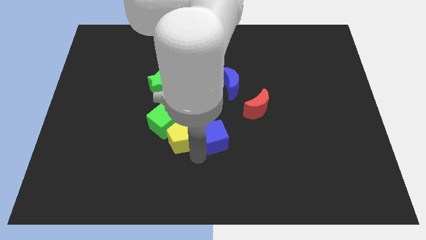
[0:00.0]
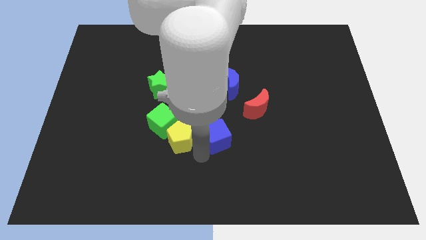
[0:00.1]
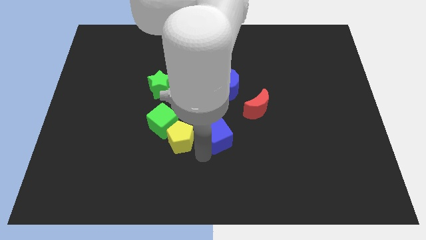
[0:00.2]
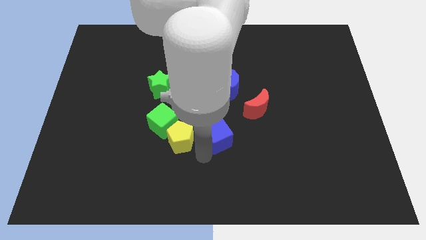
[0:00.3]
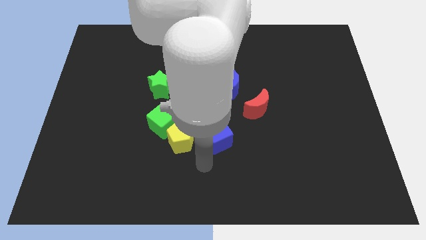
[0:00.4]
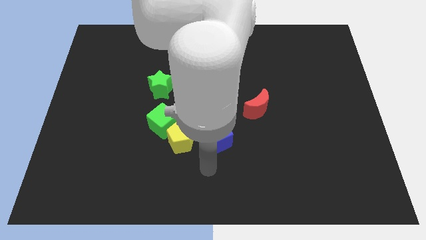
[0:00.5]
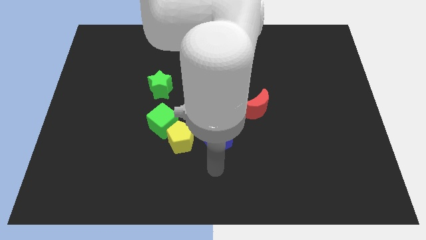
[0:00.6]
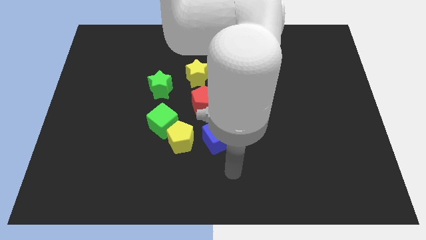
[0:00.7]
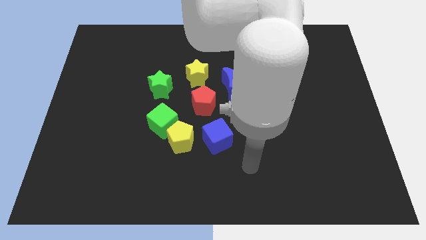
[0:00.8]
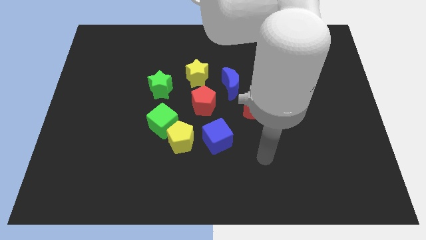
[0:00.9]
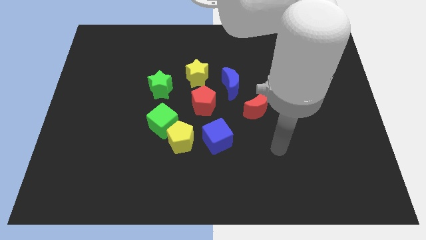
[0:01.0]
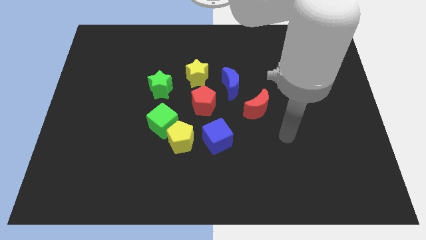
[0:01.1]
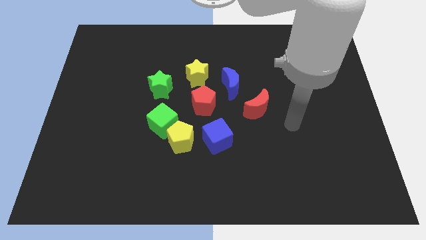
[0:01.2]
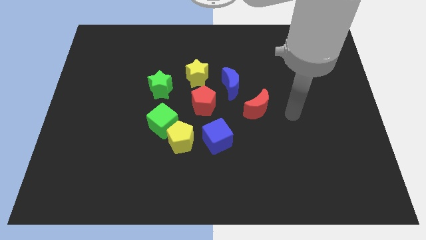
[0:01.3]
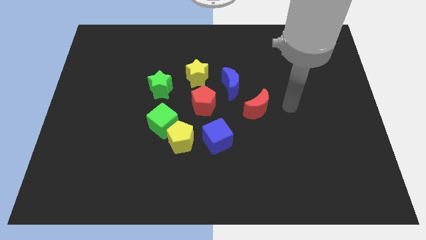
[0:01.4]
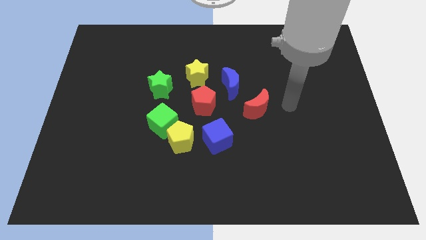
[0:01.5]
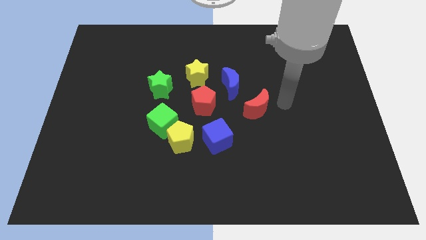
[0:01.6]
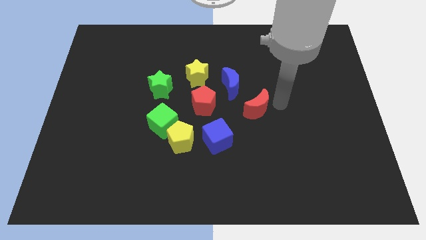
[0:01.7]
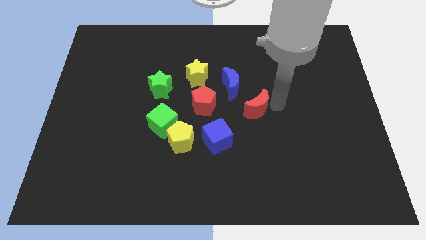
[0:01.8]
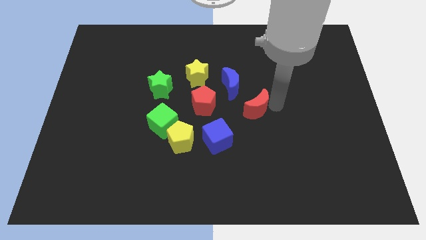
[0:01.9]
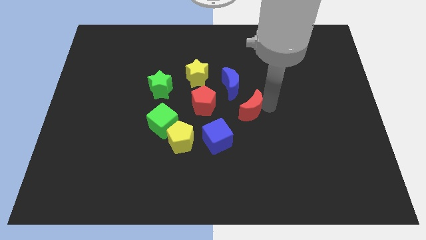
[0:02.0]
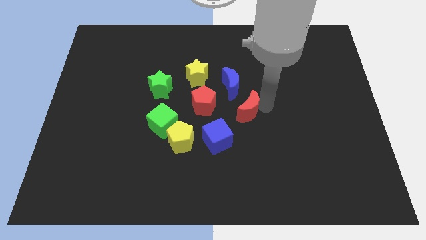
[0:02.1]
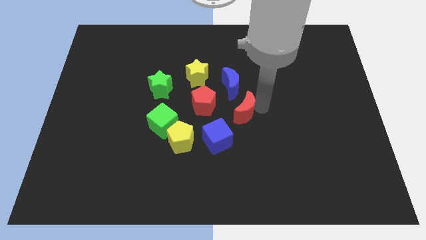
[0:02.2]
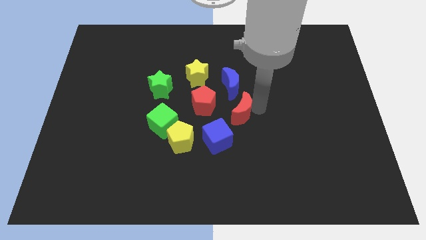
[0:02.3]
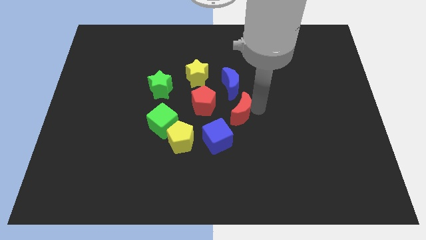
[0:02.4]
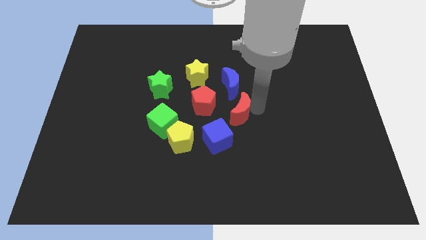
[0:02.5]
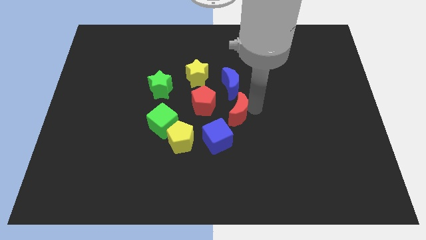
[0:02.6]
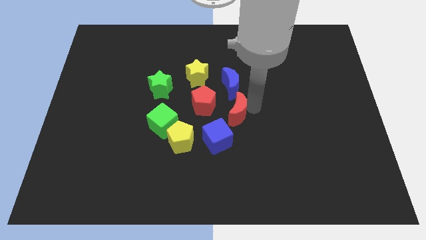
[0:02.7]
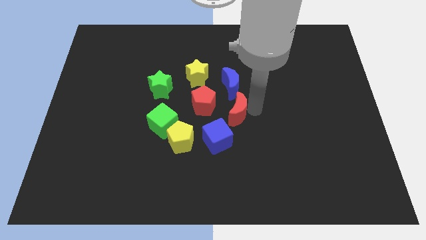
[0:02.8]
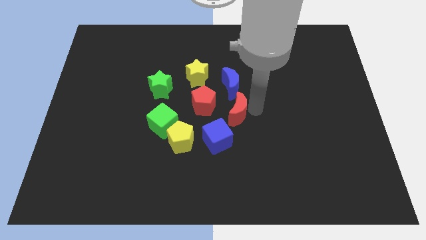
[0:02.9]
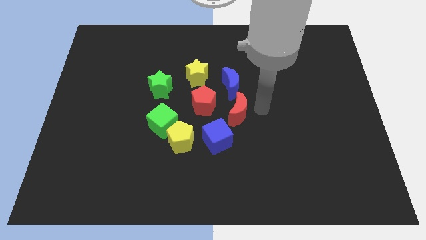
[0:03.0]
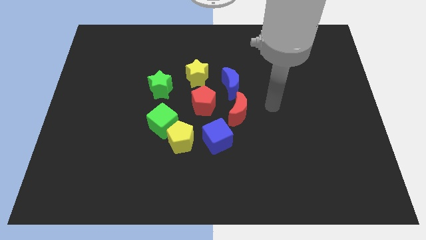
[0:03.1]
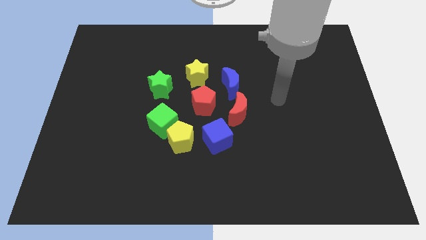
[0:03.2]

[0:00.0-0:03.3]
move the red moon to the bottom of the blue crescent

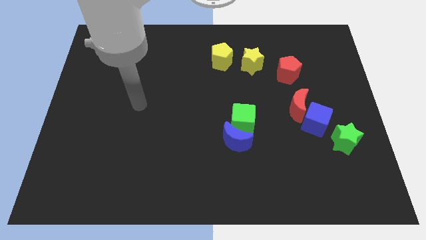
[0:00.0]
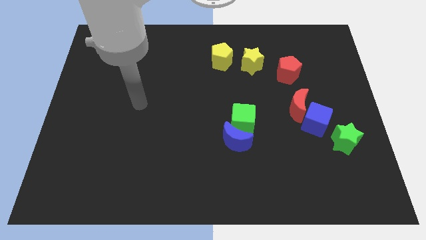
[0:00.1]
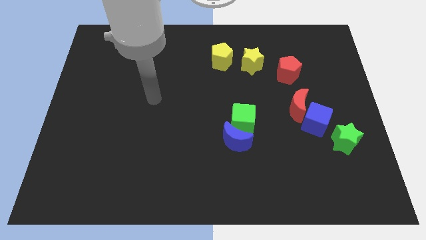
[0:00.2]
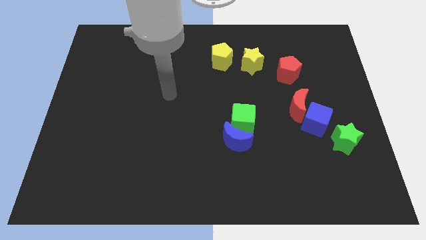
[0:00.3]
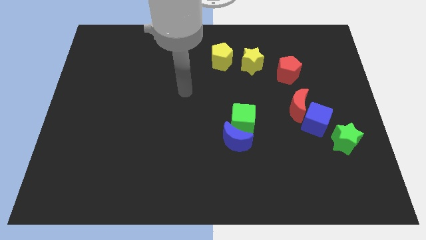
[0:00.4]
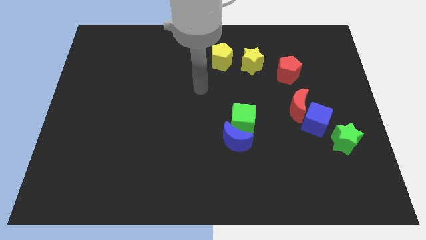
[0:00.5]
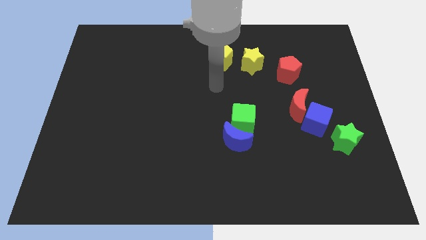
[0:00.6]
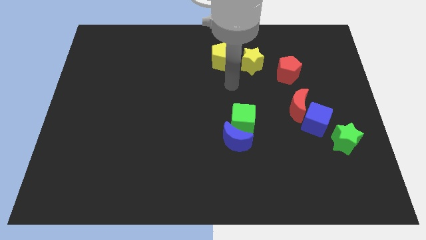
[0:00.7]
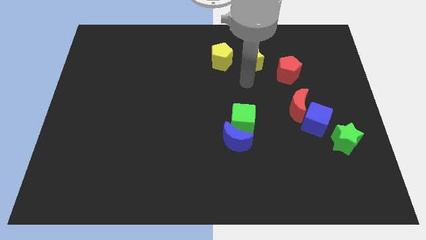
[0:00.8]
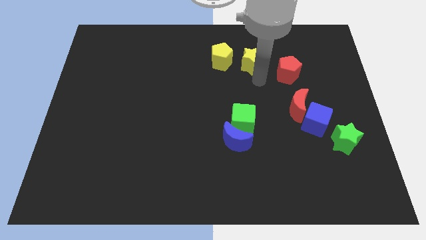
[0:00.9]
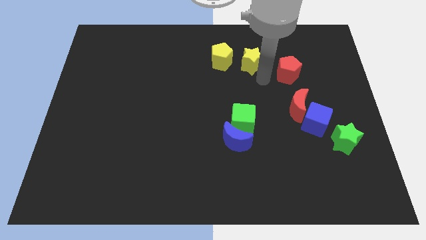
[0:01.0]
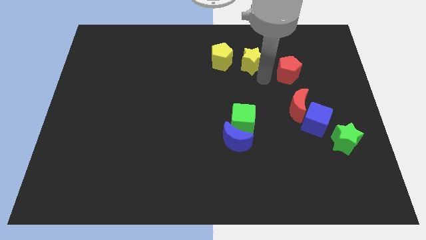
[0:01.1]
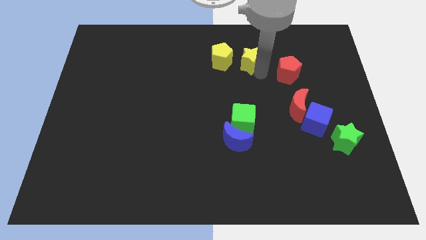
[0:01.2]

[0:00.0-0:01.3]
point your arm to the left side of red pentagon

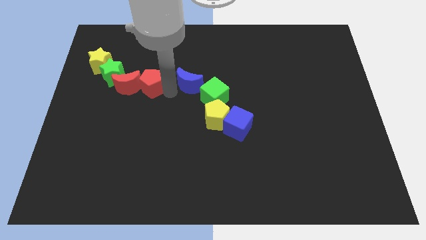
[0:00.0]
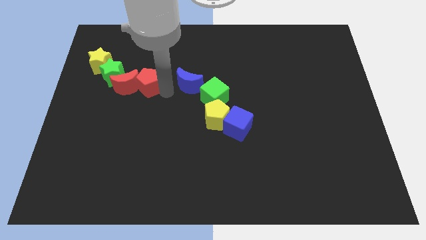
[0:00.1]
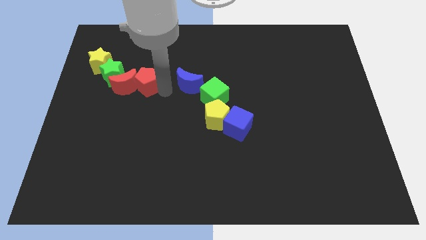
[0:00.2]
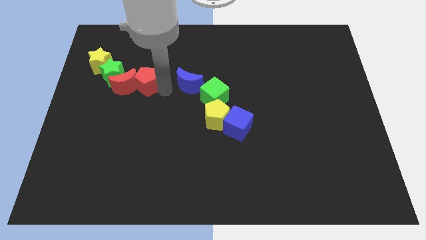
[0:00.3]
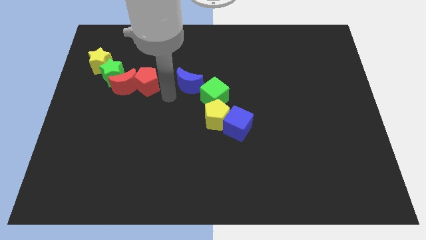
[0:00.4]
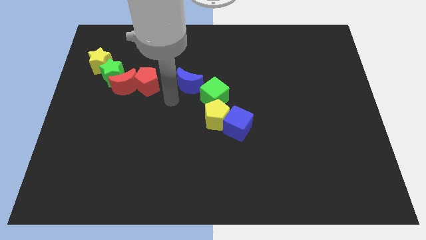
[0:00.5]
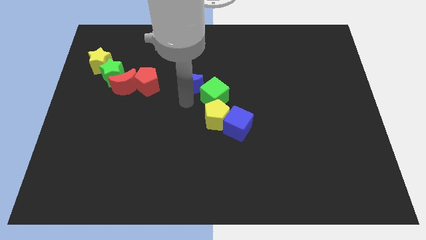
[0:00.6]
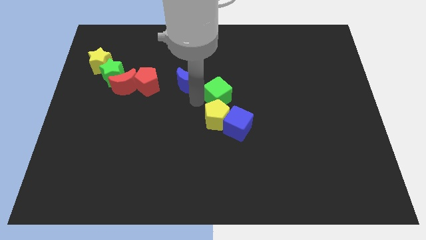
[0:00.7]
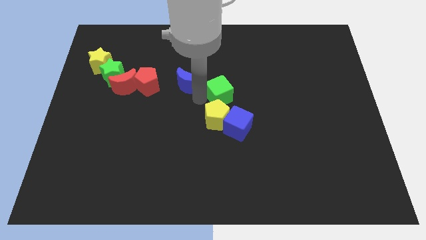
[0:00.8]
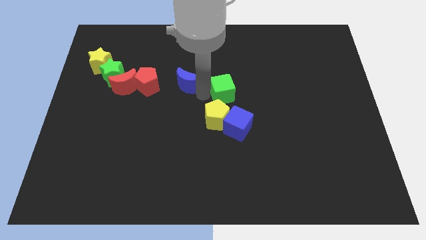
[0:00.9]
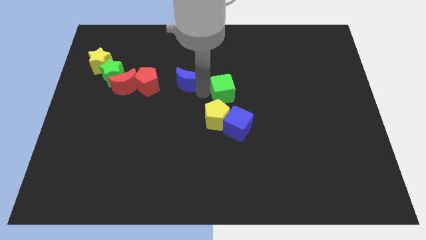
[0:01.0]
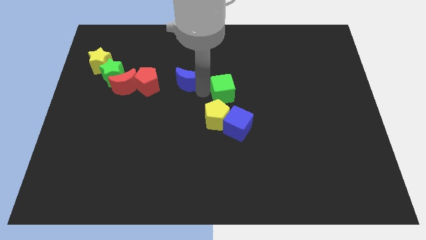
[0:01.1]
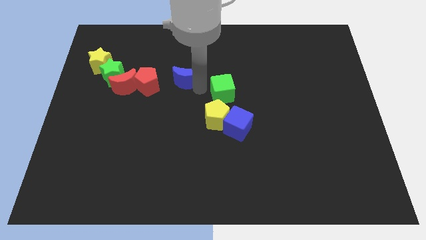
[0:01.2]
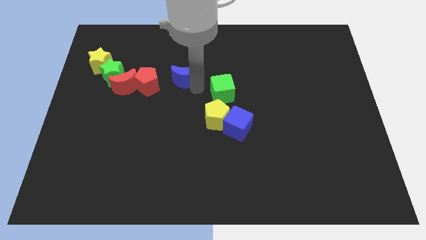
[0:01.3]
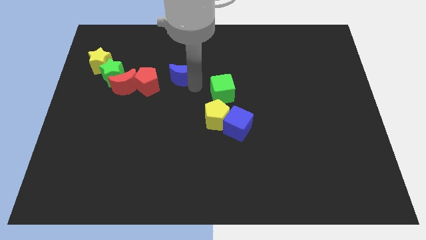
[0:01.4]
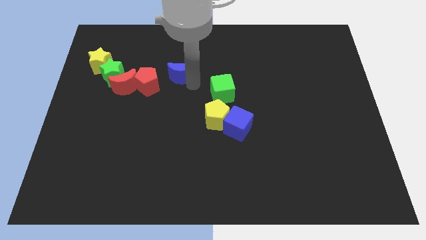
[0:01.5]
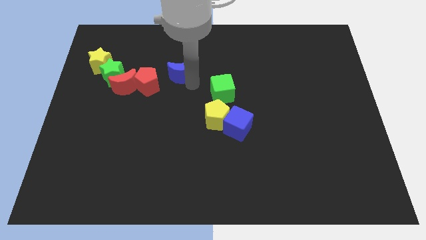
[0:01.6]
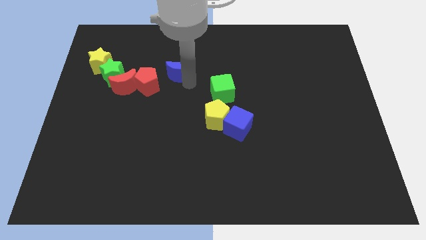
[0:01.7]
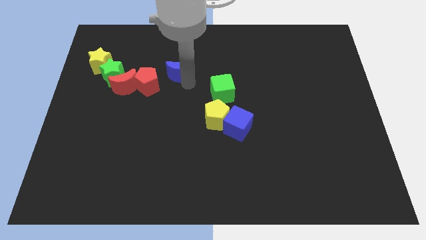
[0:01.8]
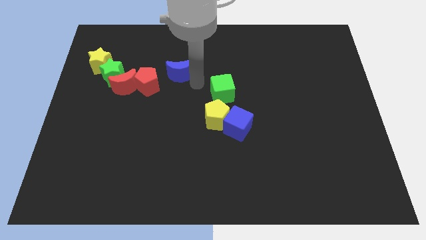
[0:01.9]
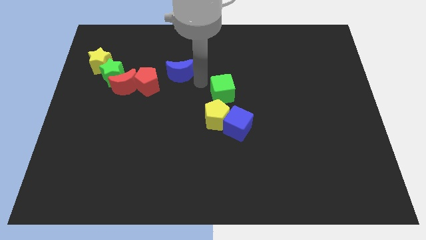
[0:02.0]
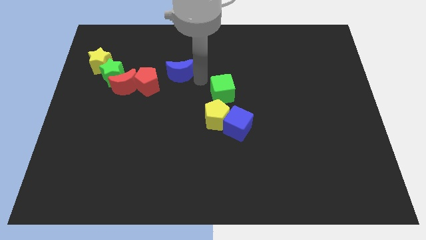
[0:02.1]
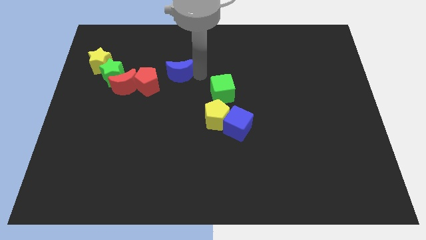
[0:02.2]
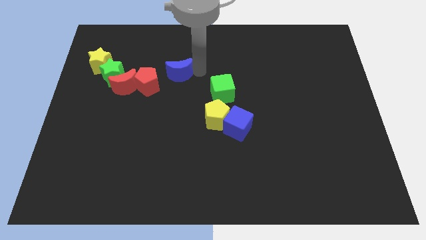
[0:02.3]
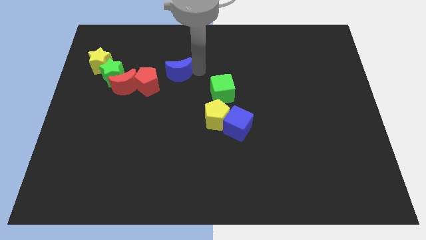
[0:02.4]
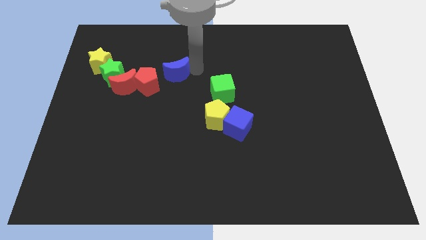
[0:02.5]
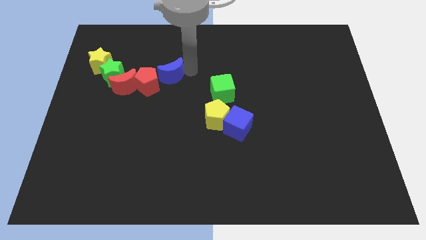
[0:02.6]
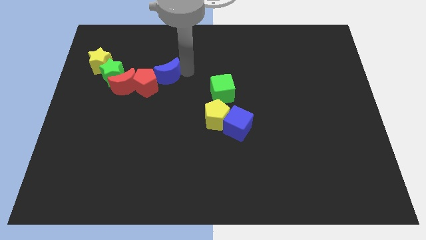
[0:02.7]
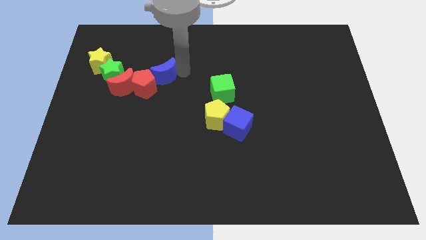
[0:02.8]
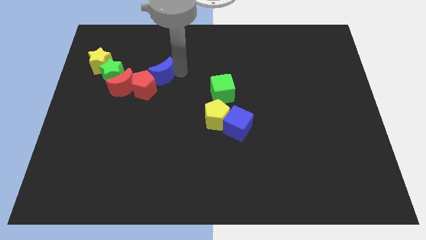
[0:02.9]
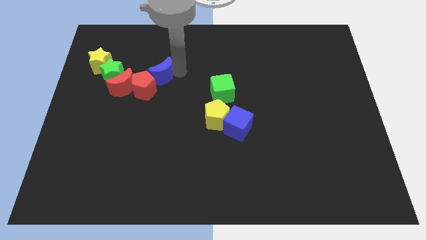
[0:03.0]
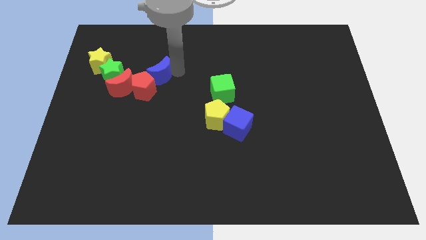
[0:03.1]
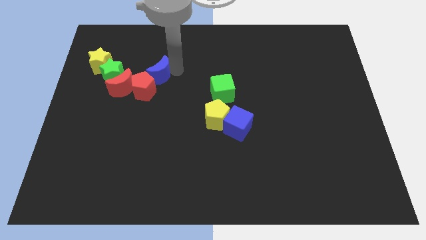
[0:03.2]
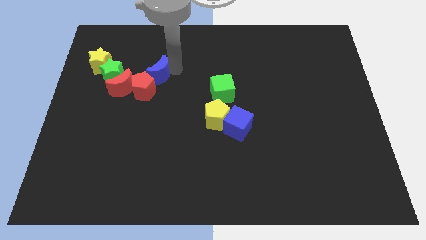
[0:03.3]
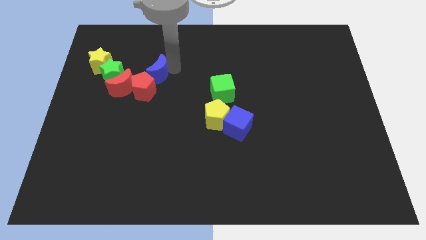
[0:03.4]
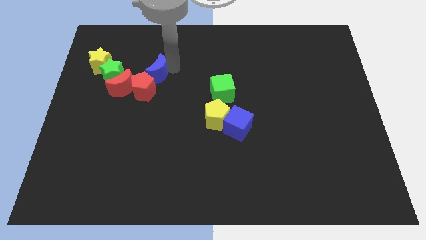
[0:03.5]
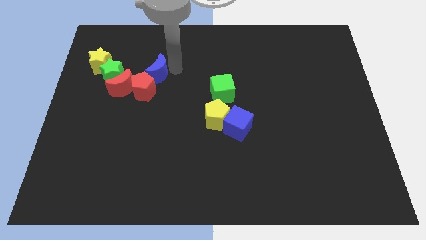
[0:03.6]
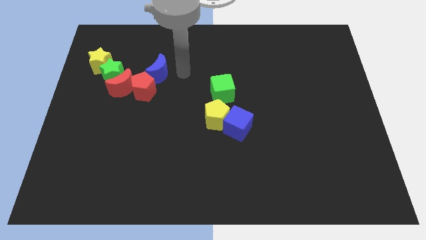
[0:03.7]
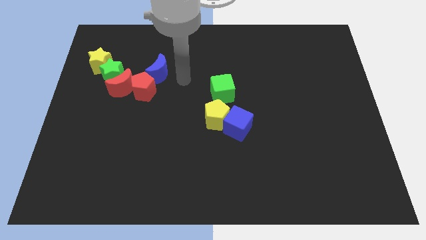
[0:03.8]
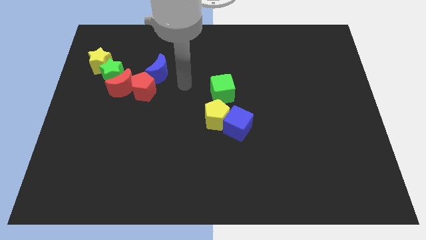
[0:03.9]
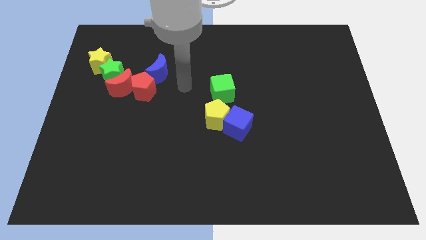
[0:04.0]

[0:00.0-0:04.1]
slide blue moon into red pentagon

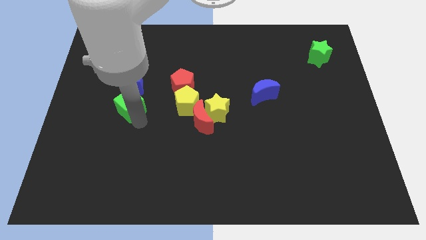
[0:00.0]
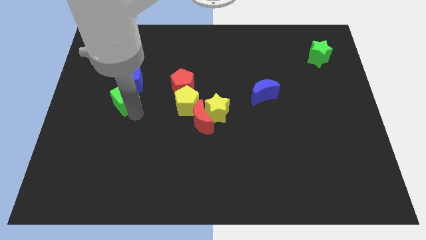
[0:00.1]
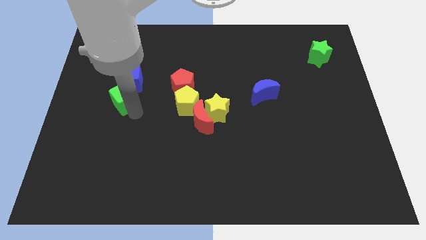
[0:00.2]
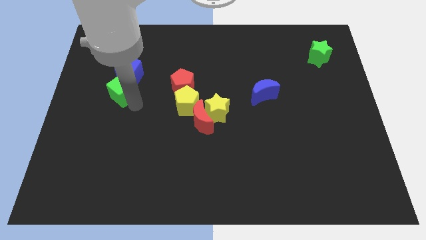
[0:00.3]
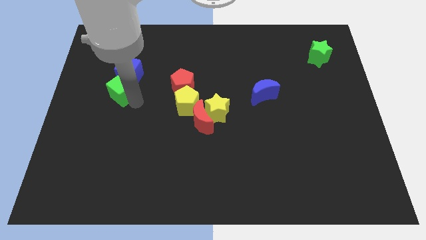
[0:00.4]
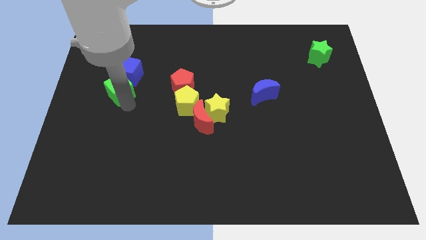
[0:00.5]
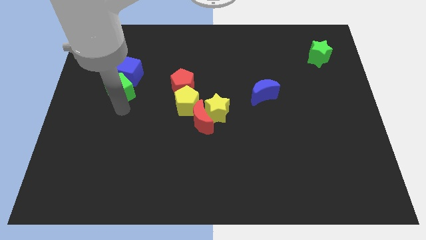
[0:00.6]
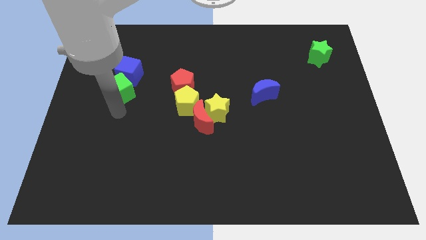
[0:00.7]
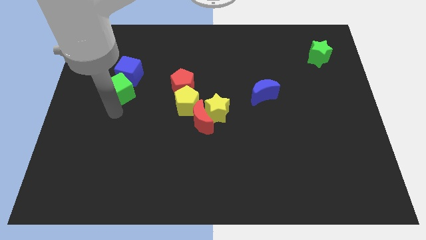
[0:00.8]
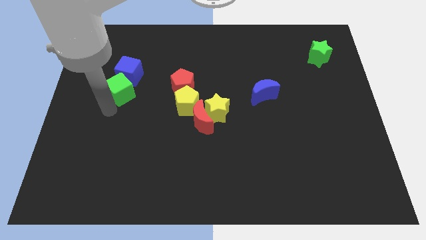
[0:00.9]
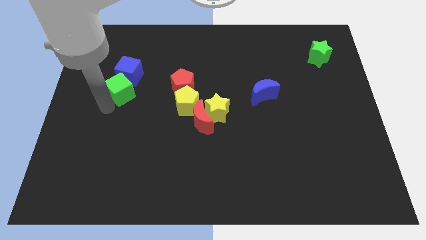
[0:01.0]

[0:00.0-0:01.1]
move the green cube towards the top side
